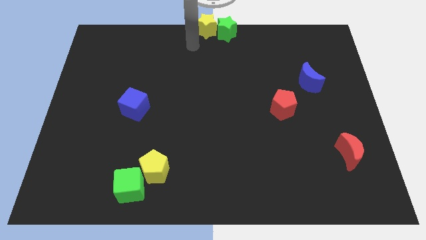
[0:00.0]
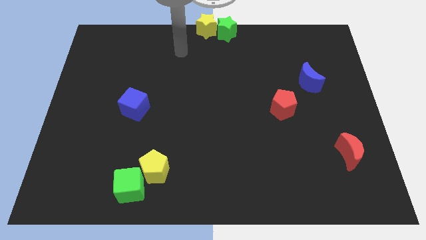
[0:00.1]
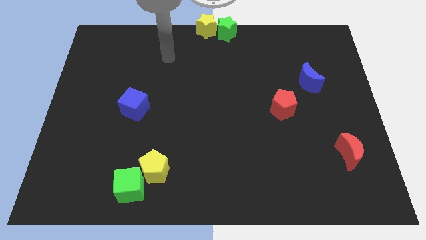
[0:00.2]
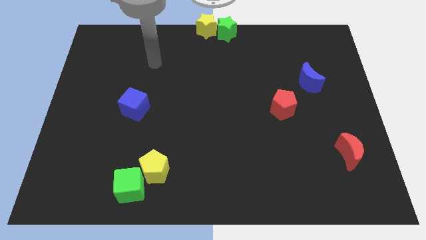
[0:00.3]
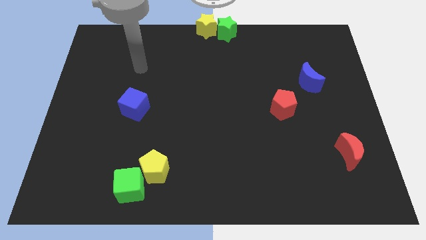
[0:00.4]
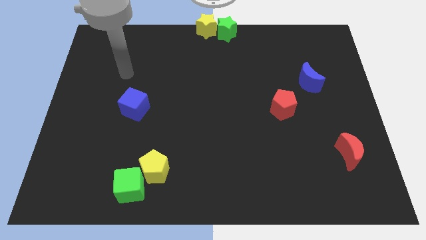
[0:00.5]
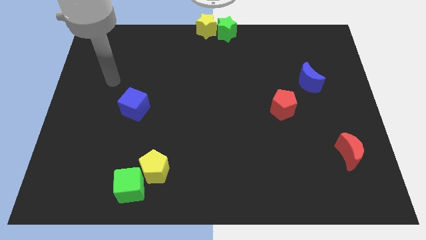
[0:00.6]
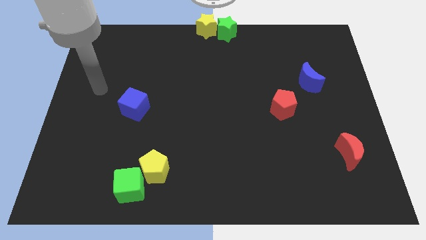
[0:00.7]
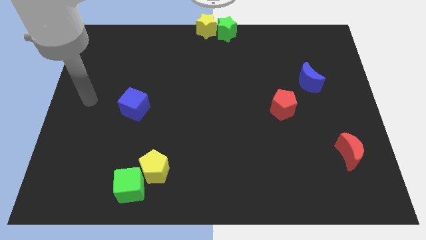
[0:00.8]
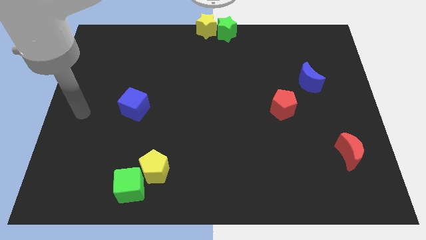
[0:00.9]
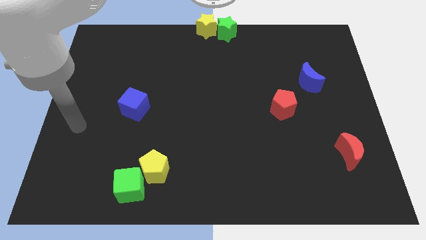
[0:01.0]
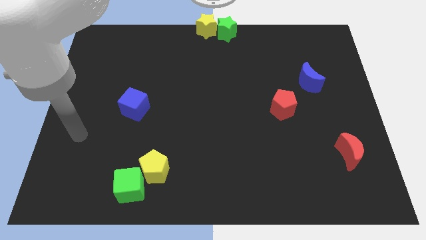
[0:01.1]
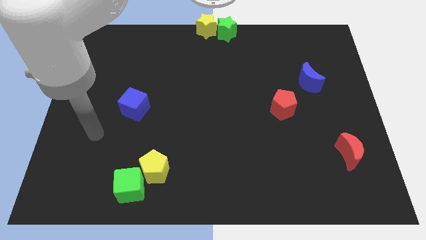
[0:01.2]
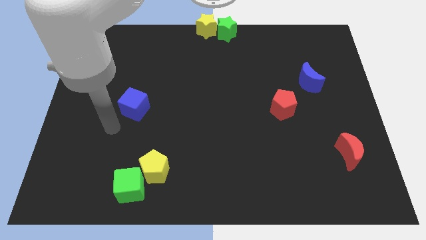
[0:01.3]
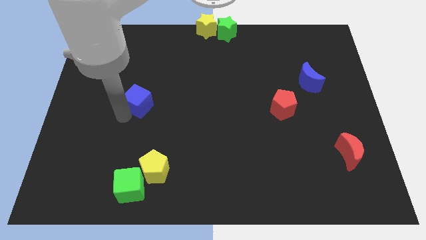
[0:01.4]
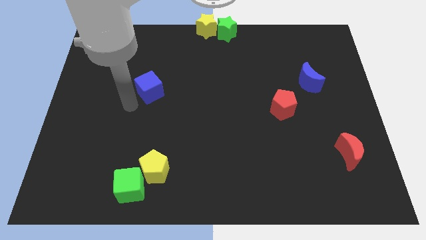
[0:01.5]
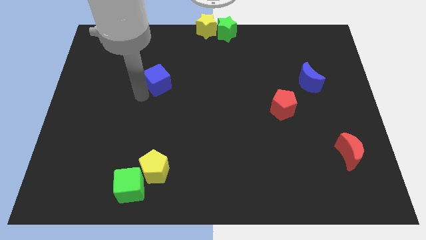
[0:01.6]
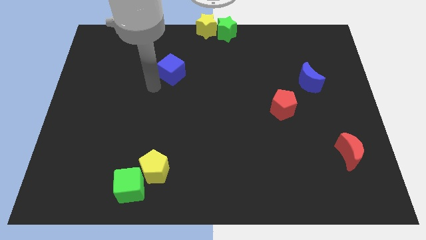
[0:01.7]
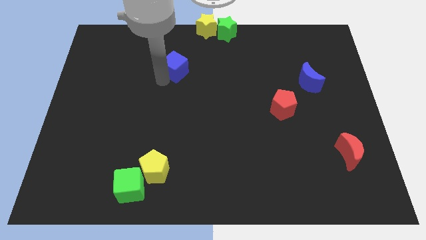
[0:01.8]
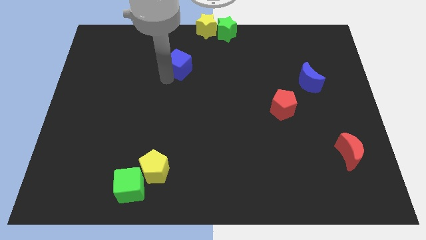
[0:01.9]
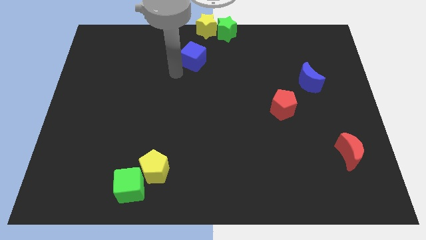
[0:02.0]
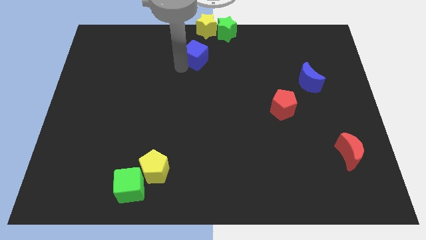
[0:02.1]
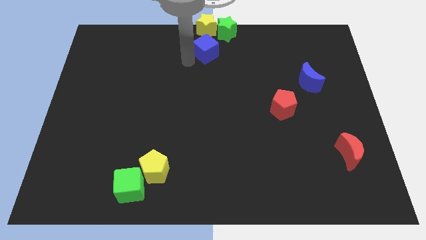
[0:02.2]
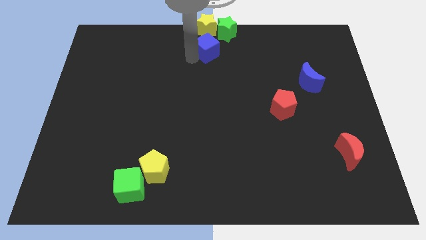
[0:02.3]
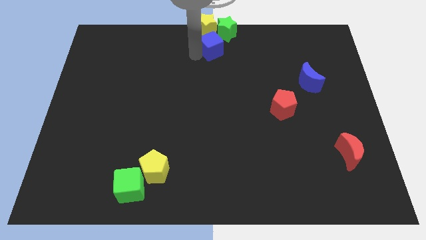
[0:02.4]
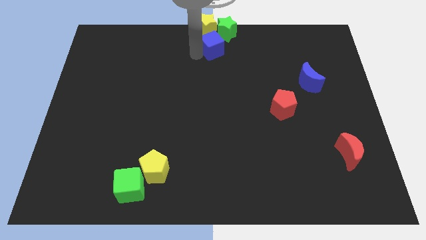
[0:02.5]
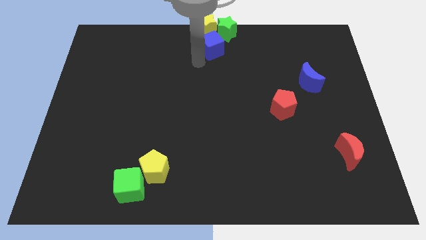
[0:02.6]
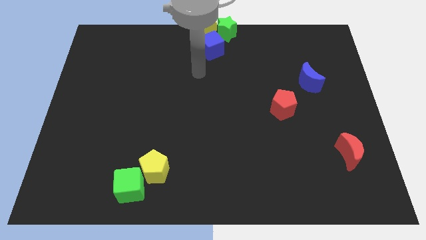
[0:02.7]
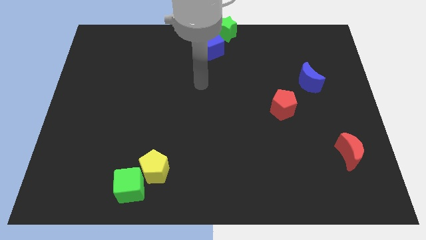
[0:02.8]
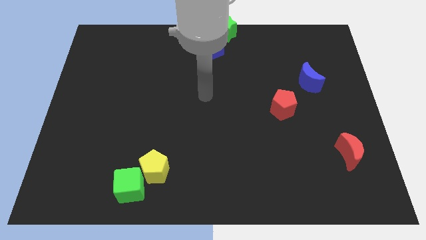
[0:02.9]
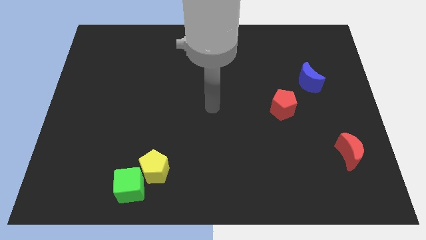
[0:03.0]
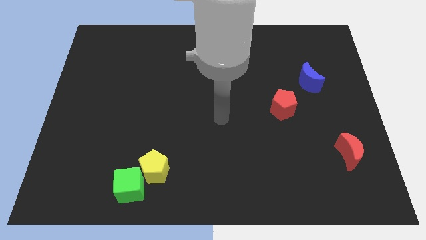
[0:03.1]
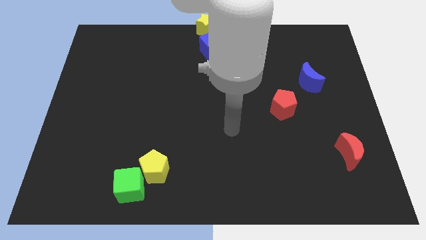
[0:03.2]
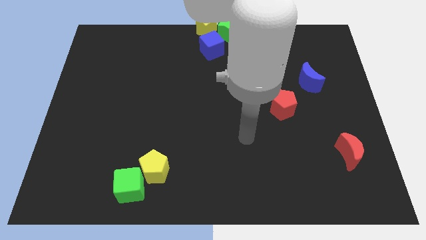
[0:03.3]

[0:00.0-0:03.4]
push the blue cube into the yellow star

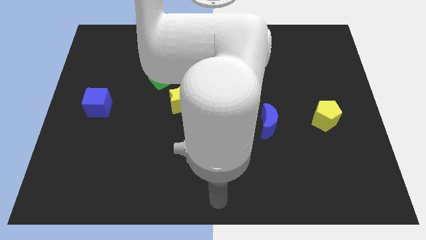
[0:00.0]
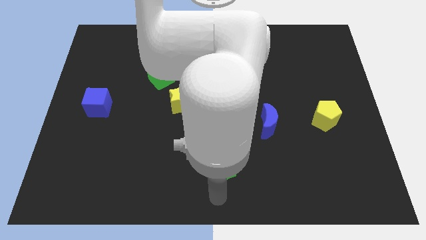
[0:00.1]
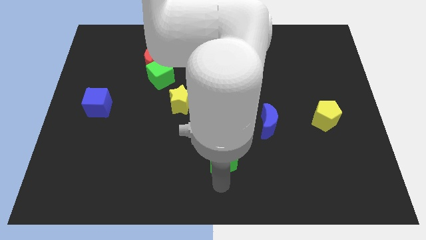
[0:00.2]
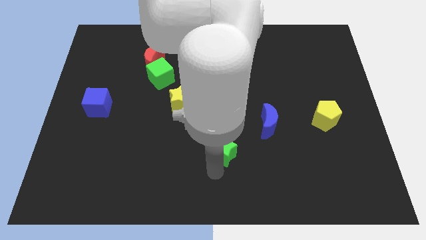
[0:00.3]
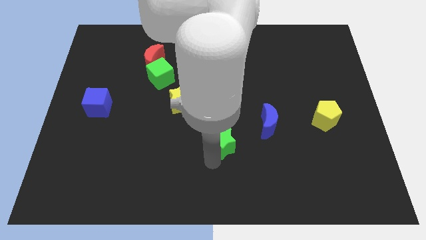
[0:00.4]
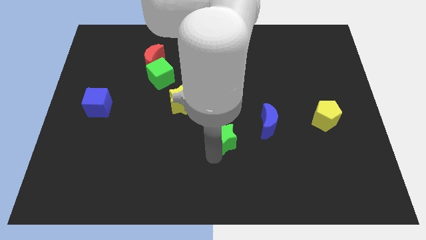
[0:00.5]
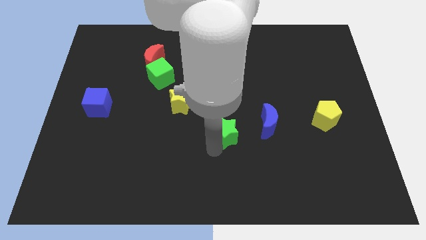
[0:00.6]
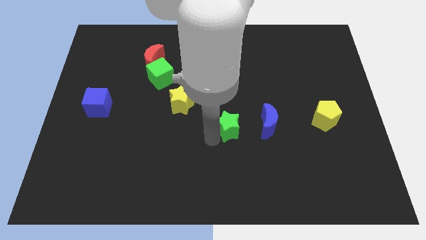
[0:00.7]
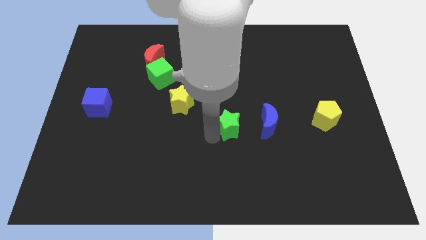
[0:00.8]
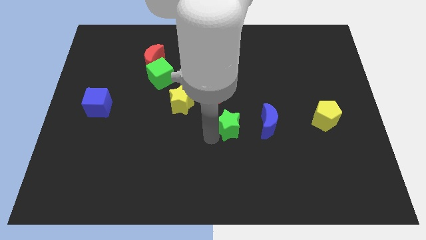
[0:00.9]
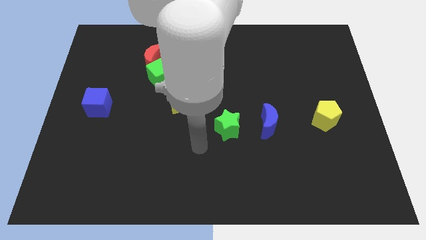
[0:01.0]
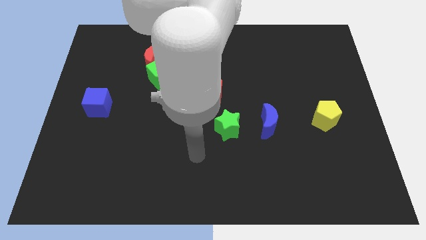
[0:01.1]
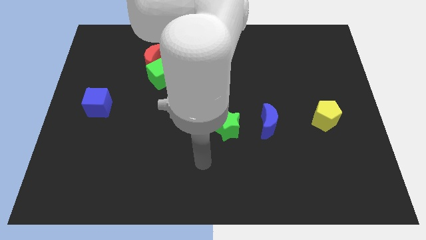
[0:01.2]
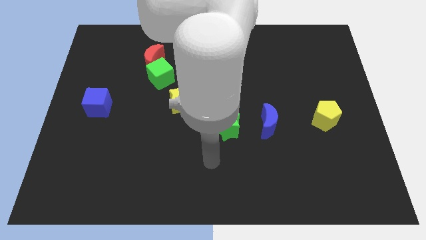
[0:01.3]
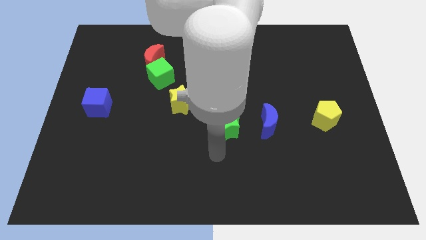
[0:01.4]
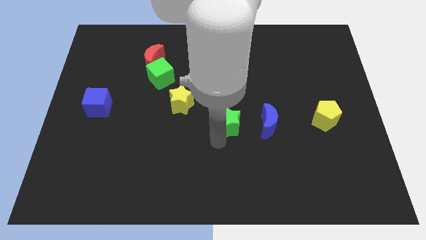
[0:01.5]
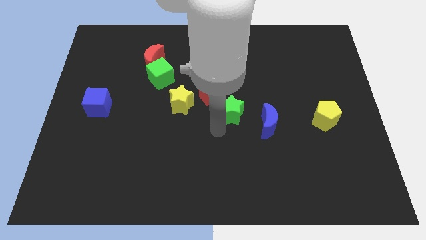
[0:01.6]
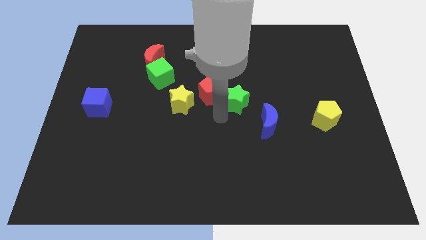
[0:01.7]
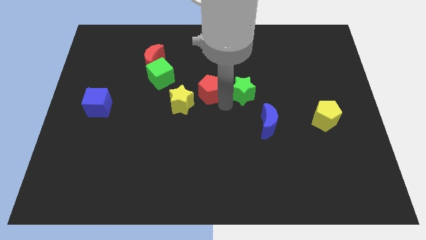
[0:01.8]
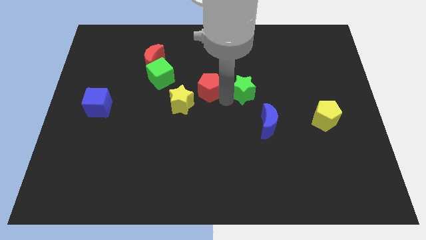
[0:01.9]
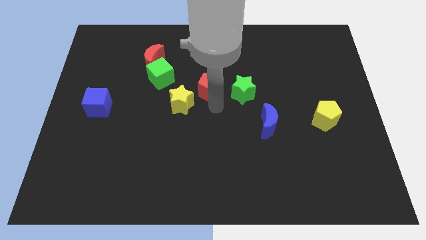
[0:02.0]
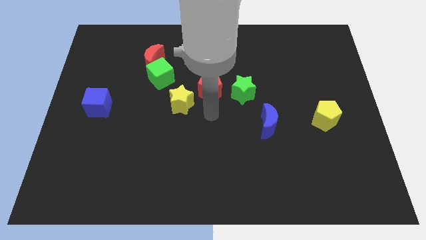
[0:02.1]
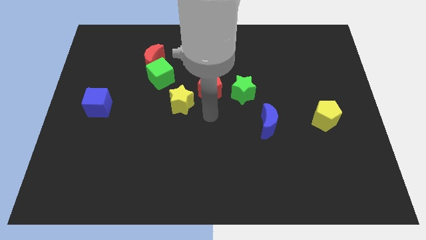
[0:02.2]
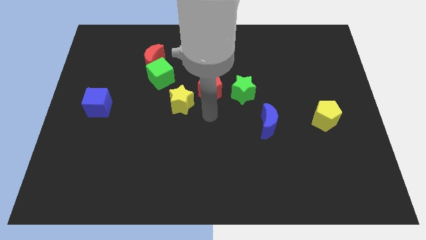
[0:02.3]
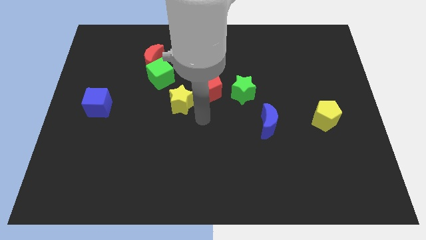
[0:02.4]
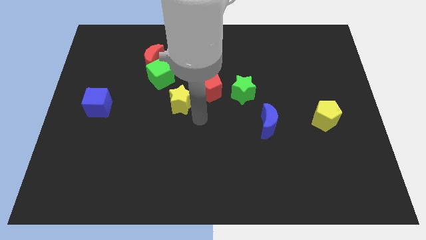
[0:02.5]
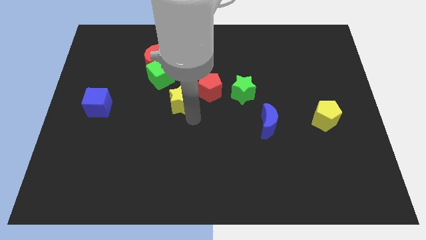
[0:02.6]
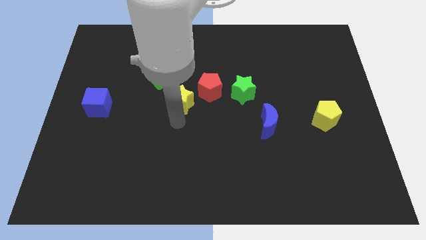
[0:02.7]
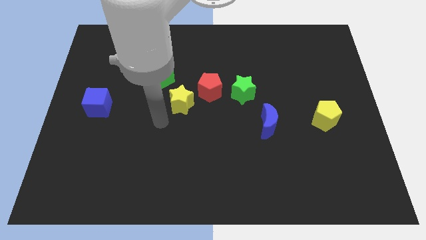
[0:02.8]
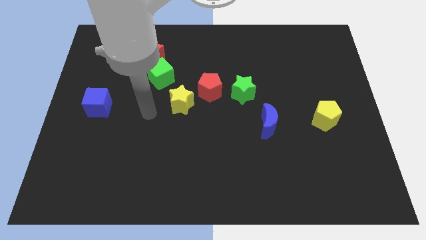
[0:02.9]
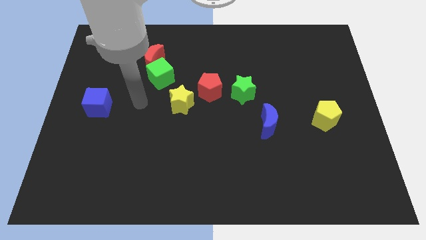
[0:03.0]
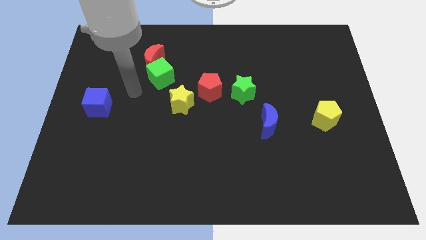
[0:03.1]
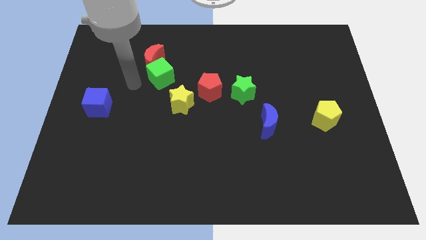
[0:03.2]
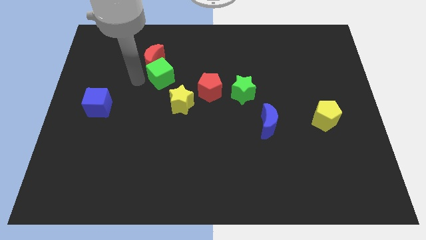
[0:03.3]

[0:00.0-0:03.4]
slide the green star diagonally top left to the blue moon

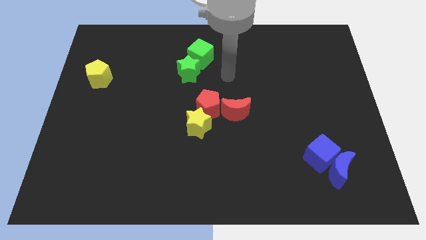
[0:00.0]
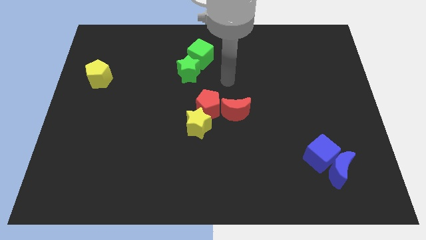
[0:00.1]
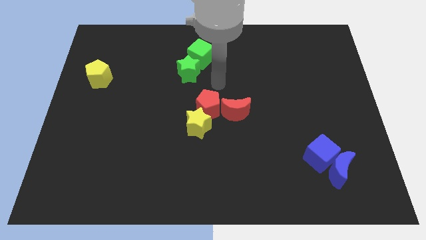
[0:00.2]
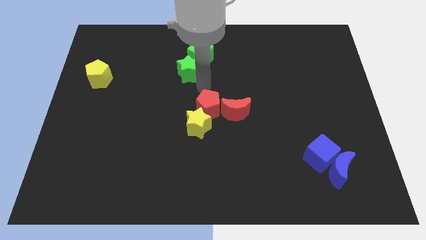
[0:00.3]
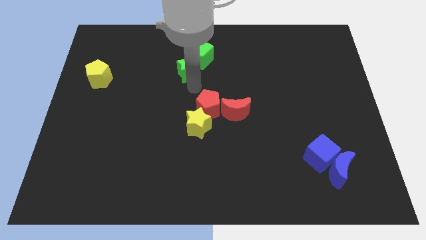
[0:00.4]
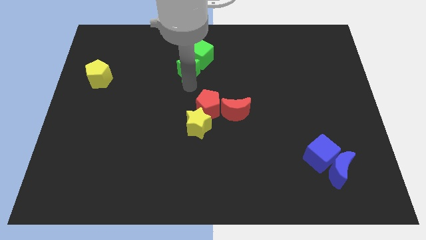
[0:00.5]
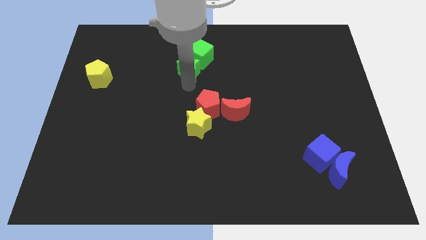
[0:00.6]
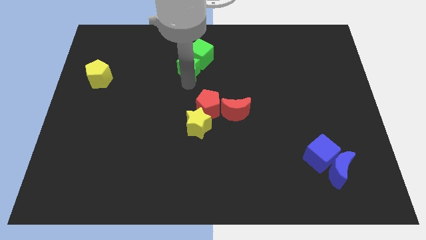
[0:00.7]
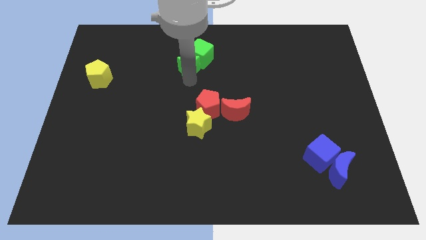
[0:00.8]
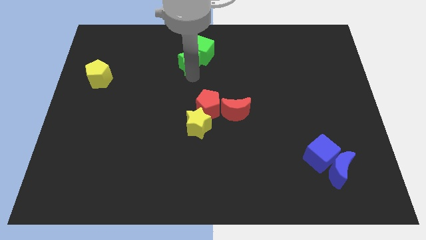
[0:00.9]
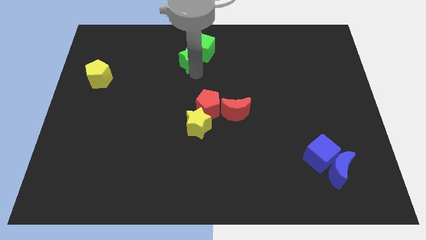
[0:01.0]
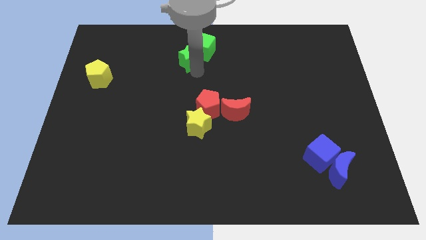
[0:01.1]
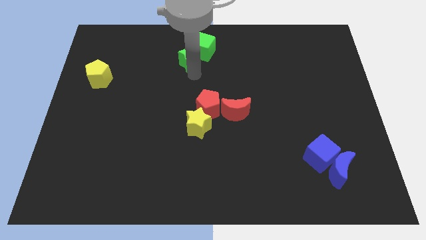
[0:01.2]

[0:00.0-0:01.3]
push the green blocks towards the top side of the board

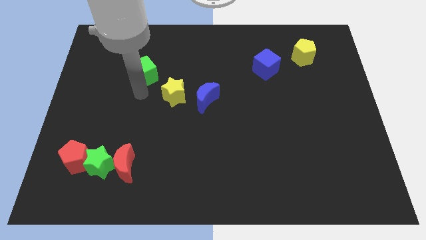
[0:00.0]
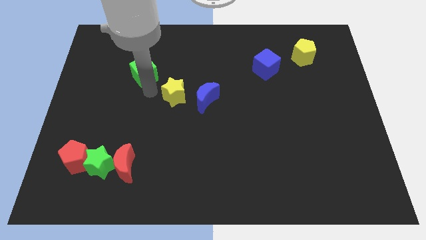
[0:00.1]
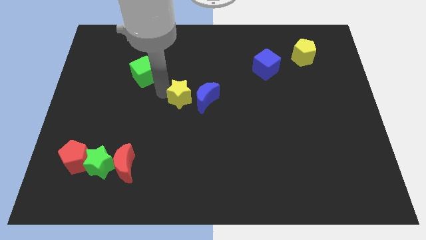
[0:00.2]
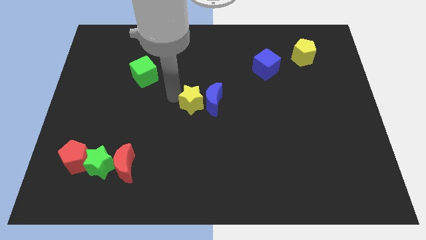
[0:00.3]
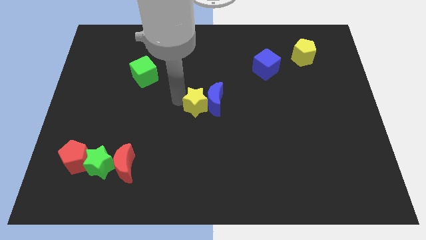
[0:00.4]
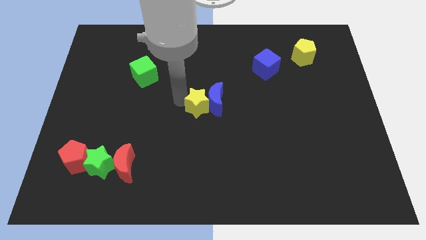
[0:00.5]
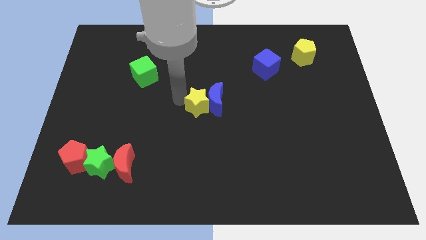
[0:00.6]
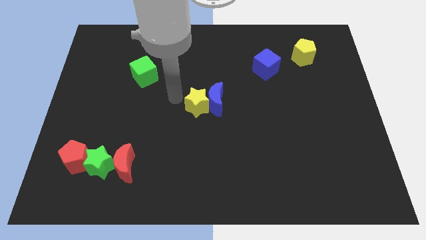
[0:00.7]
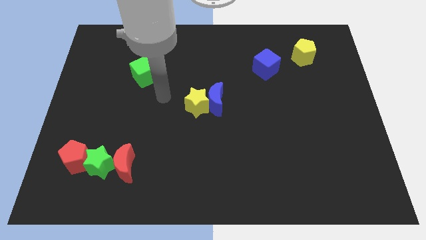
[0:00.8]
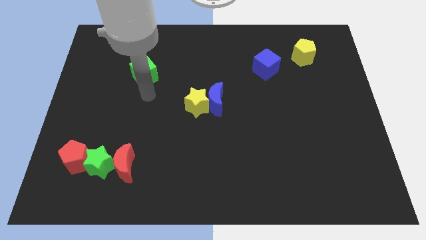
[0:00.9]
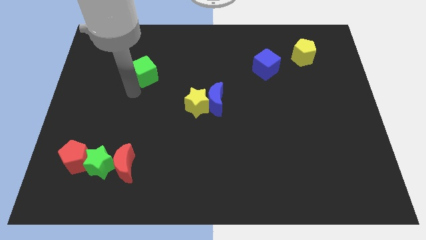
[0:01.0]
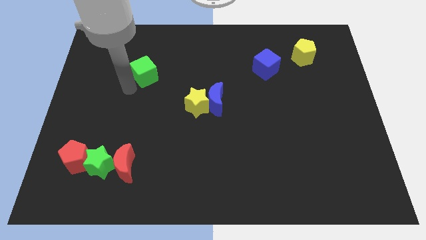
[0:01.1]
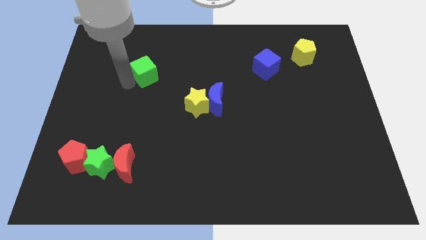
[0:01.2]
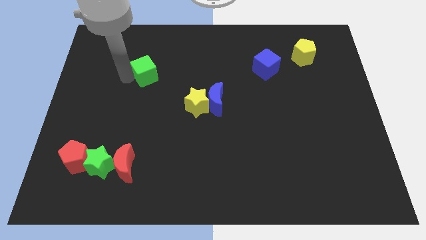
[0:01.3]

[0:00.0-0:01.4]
move the yellow star into the blue crescent
